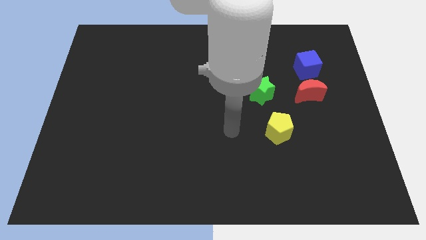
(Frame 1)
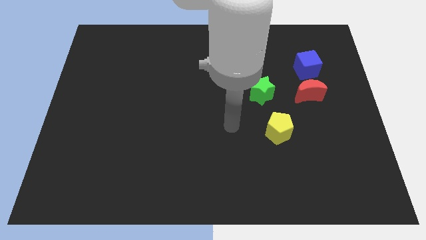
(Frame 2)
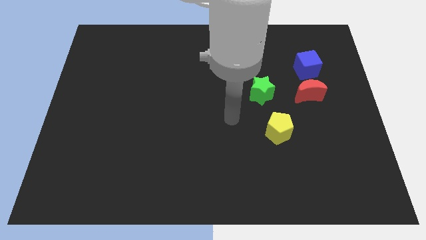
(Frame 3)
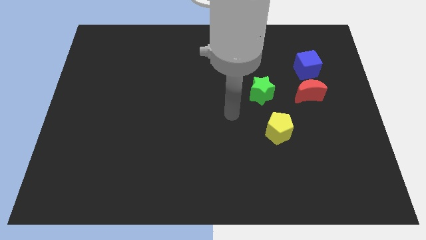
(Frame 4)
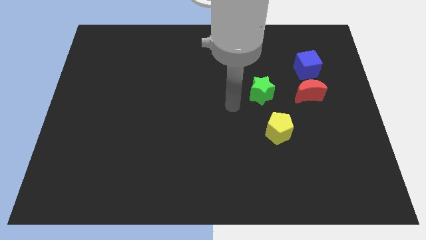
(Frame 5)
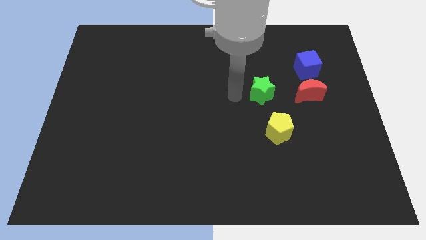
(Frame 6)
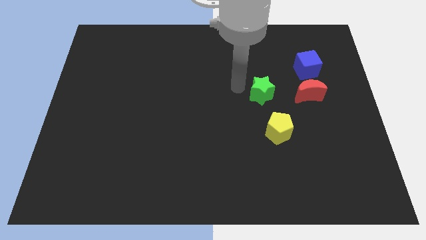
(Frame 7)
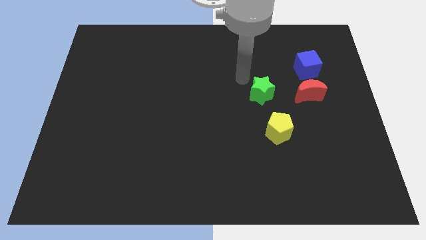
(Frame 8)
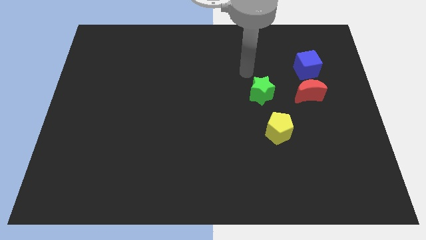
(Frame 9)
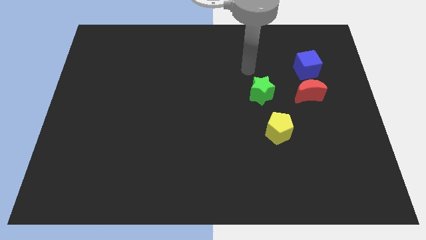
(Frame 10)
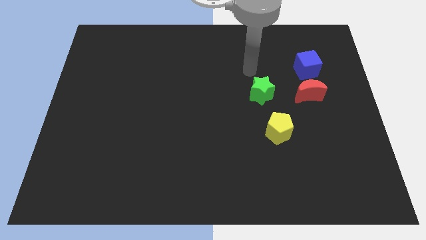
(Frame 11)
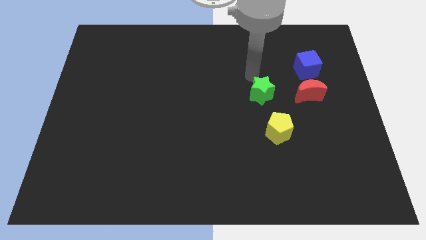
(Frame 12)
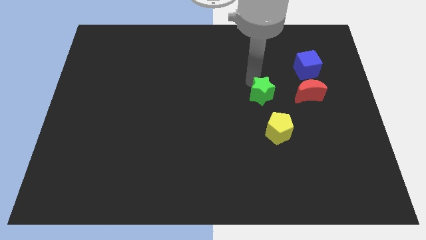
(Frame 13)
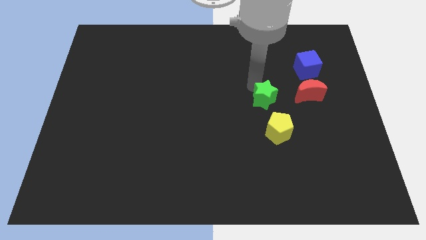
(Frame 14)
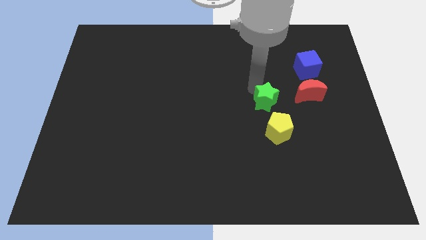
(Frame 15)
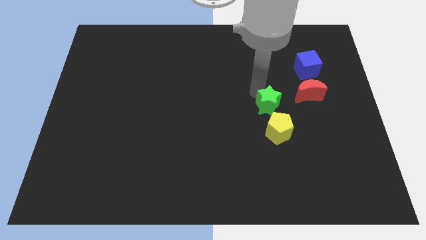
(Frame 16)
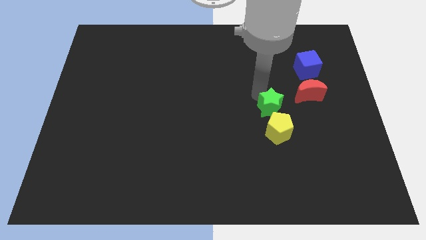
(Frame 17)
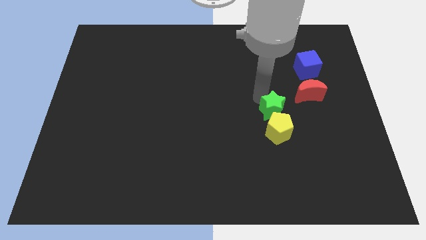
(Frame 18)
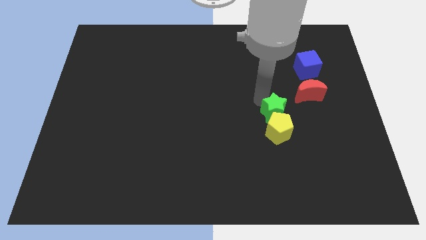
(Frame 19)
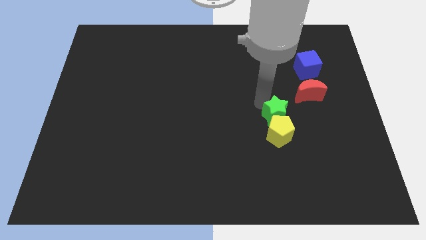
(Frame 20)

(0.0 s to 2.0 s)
move the green star towards the pentagon

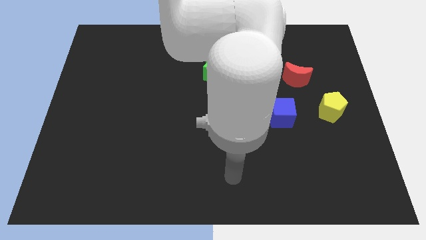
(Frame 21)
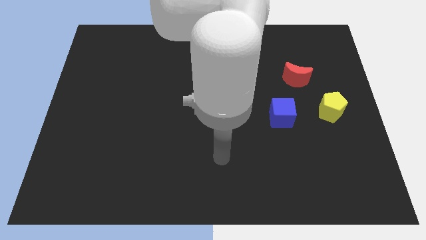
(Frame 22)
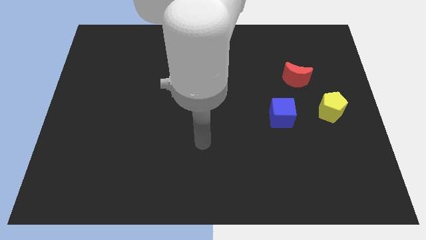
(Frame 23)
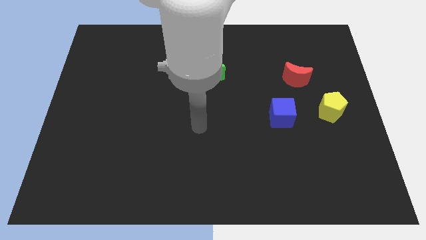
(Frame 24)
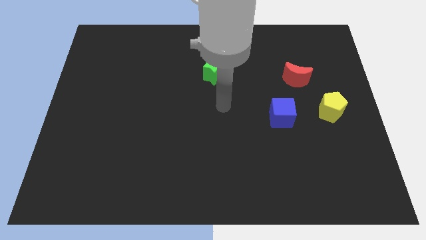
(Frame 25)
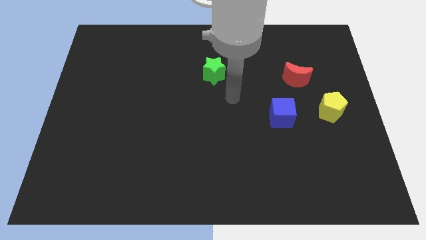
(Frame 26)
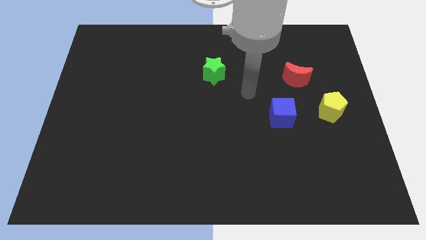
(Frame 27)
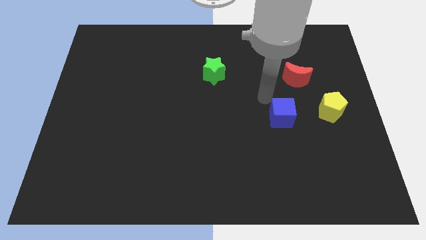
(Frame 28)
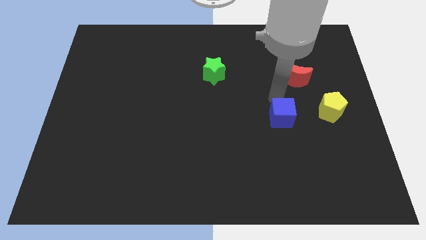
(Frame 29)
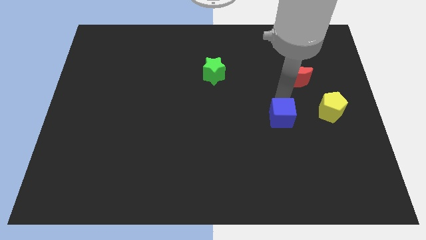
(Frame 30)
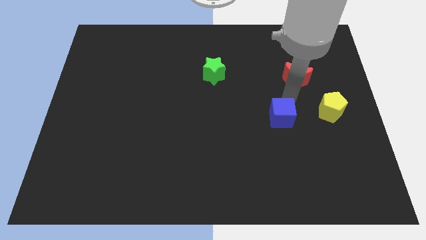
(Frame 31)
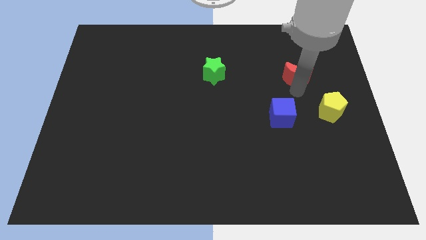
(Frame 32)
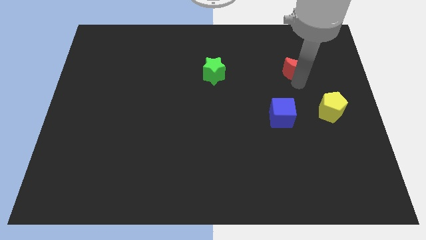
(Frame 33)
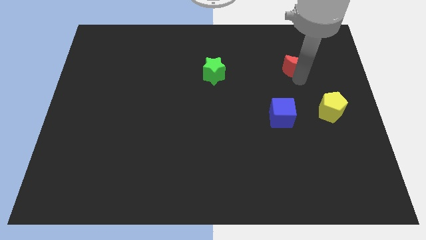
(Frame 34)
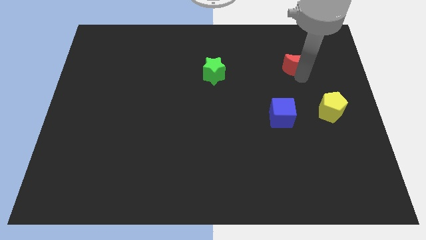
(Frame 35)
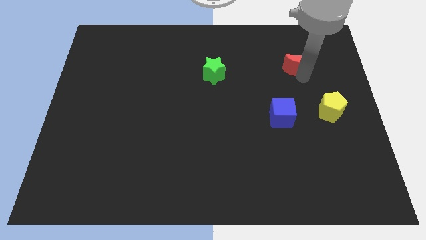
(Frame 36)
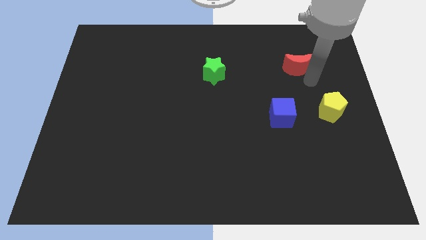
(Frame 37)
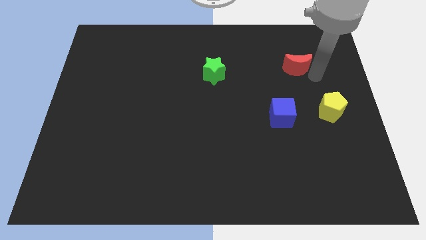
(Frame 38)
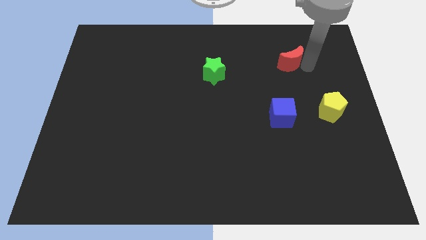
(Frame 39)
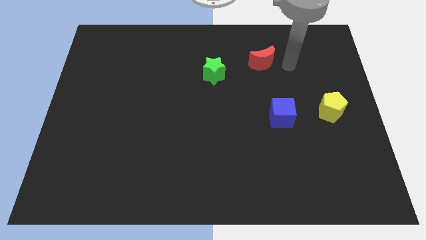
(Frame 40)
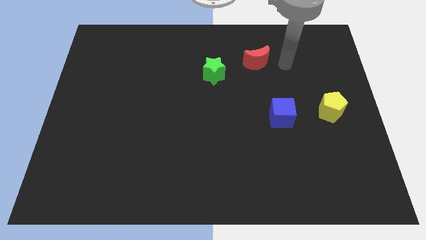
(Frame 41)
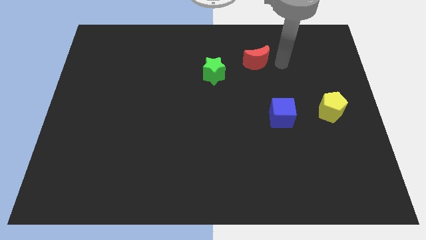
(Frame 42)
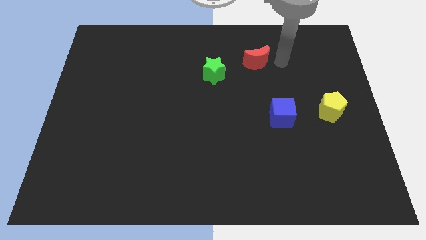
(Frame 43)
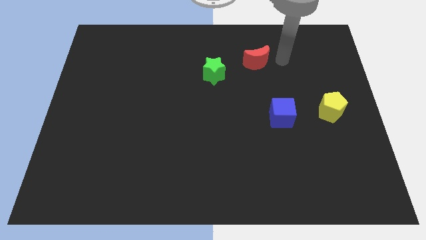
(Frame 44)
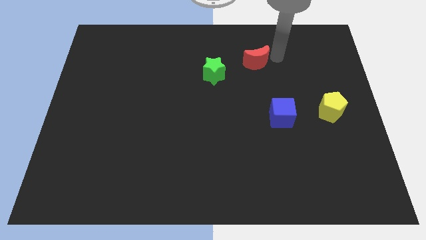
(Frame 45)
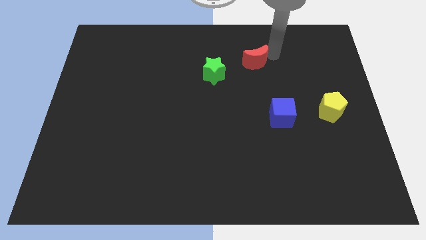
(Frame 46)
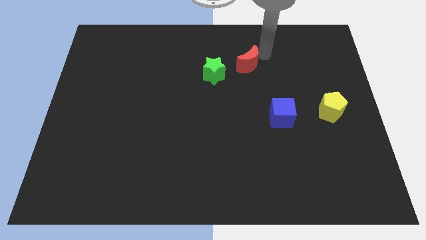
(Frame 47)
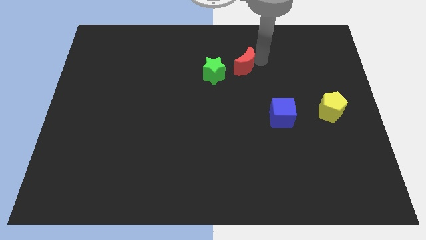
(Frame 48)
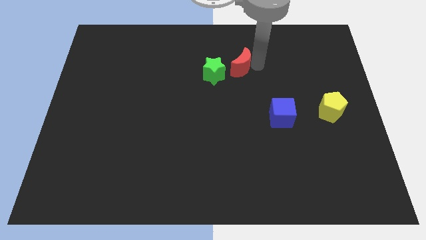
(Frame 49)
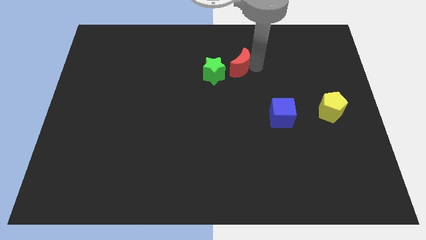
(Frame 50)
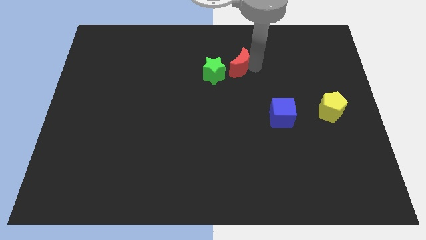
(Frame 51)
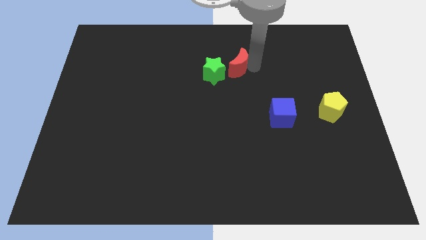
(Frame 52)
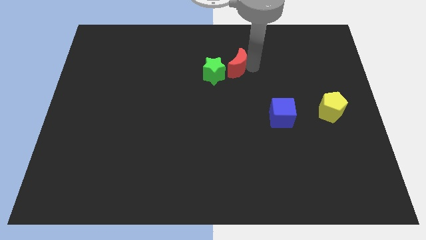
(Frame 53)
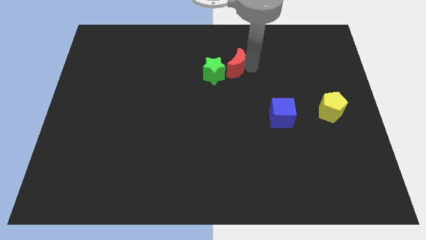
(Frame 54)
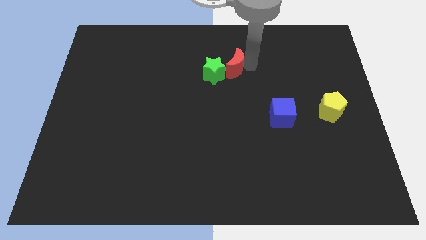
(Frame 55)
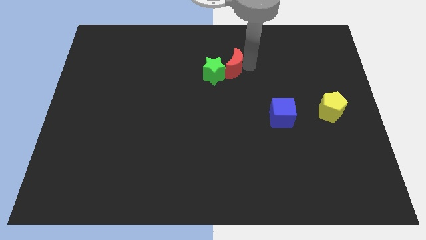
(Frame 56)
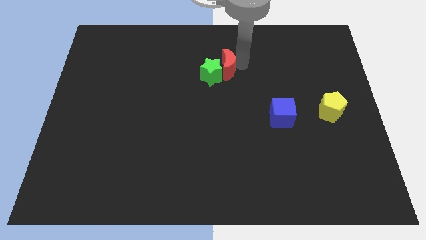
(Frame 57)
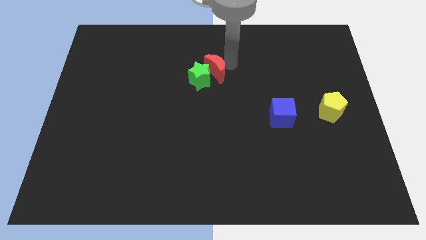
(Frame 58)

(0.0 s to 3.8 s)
slide the moon to the green star

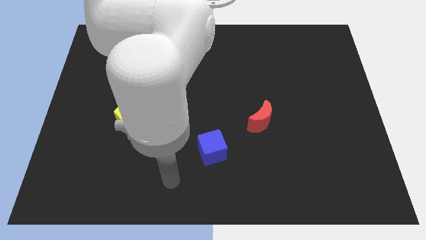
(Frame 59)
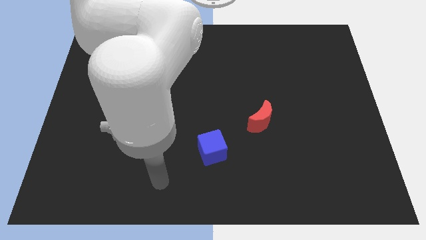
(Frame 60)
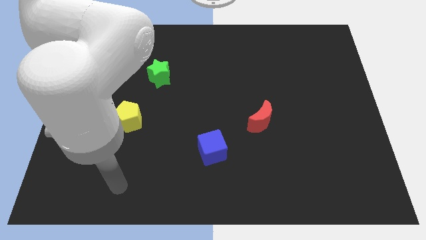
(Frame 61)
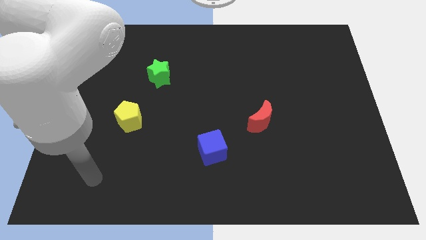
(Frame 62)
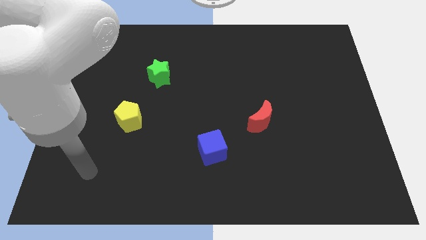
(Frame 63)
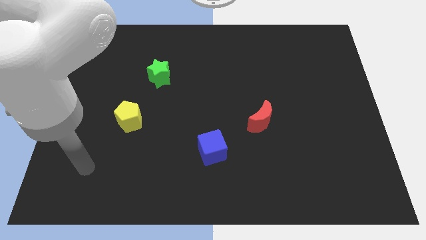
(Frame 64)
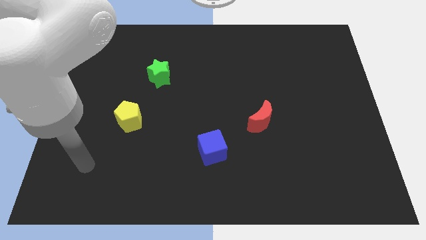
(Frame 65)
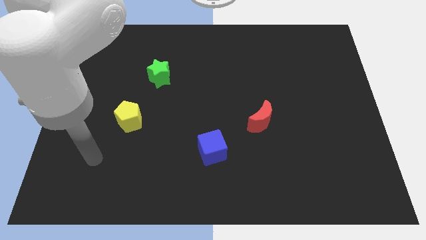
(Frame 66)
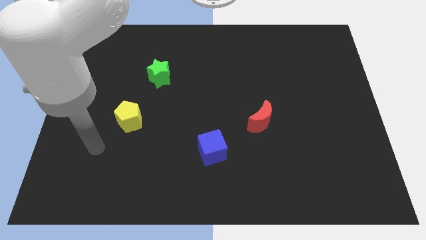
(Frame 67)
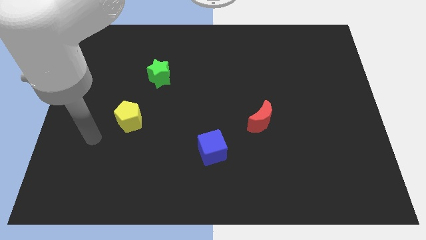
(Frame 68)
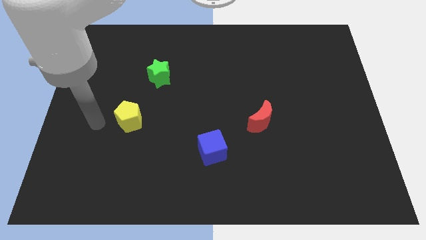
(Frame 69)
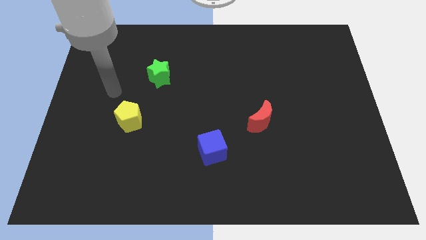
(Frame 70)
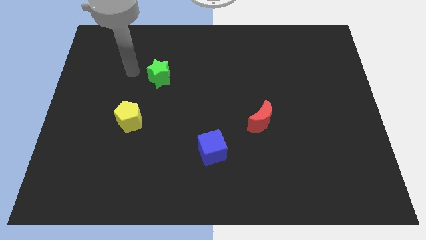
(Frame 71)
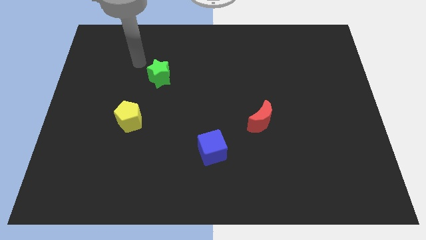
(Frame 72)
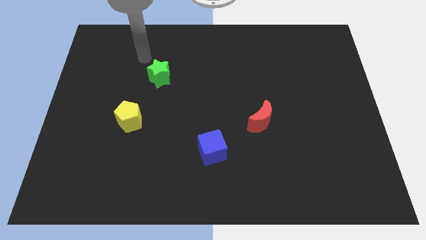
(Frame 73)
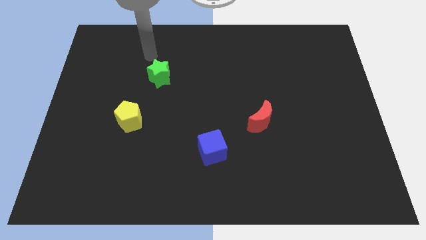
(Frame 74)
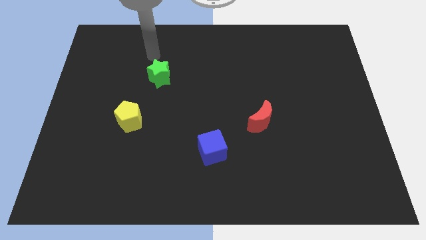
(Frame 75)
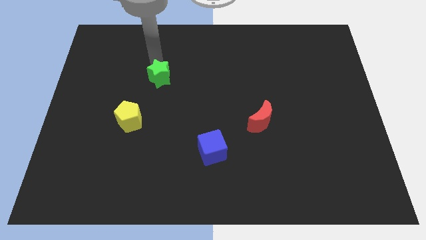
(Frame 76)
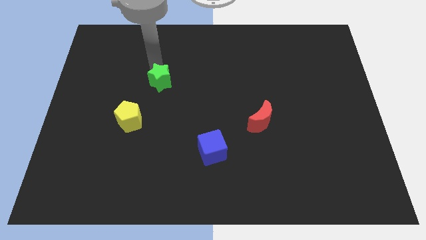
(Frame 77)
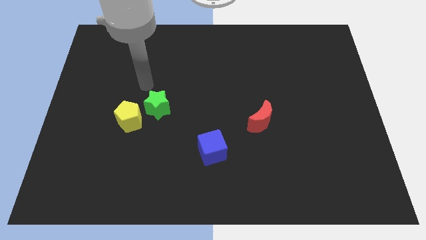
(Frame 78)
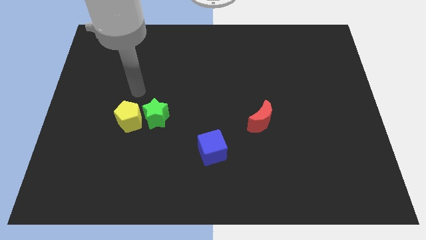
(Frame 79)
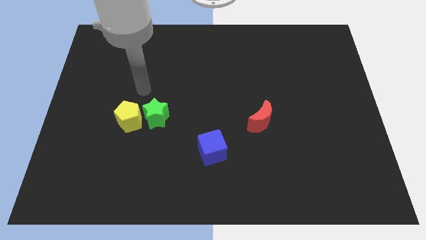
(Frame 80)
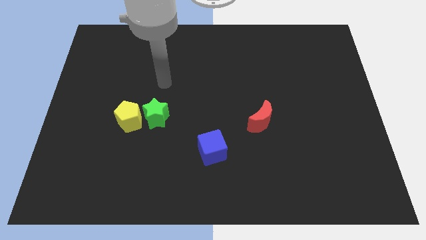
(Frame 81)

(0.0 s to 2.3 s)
slide the green block next to the pentagon

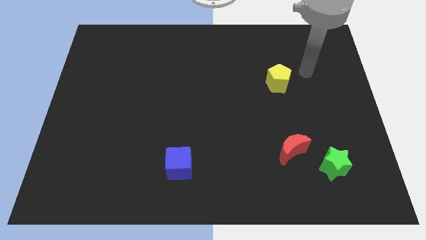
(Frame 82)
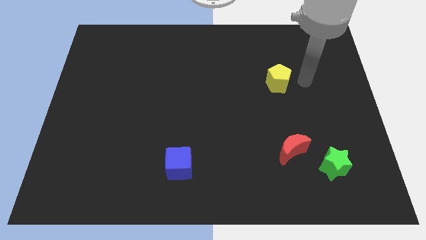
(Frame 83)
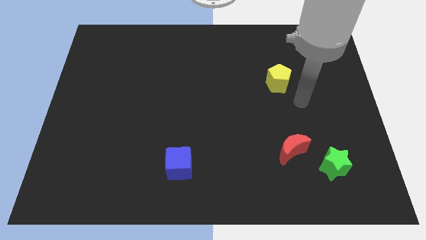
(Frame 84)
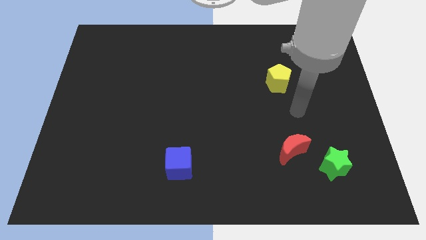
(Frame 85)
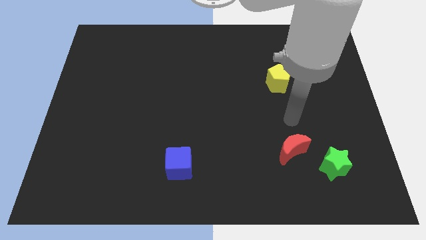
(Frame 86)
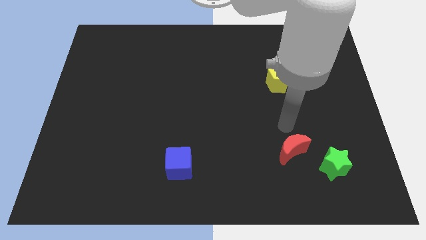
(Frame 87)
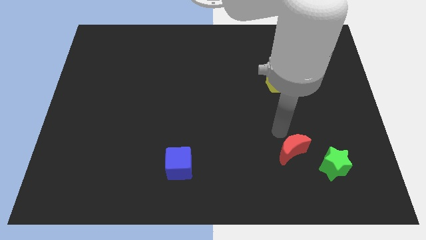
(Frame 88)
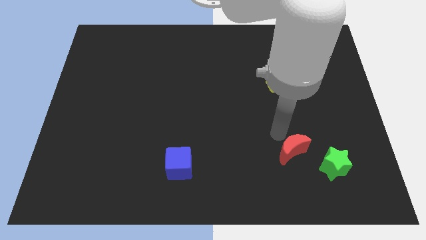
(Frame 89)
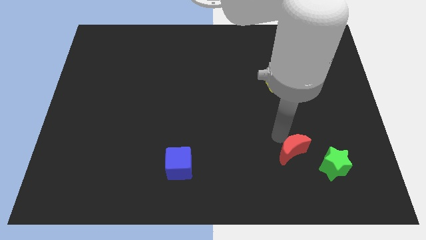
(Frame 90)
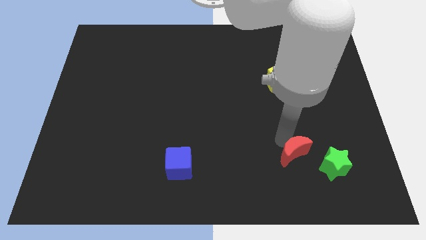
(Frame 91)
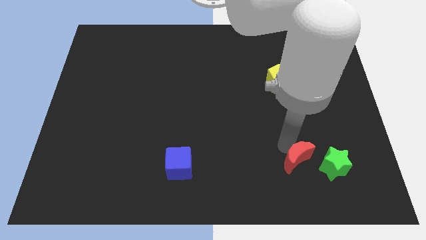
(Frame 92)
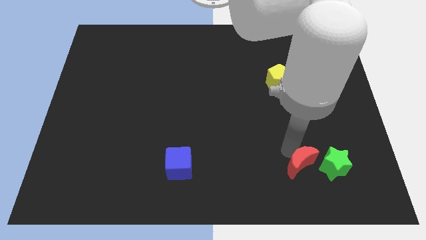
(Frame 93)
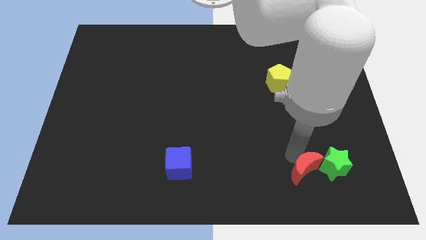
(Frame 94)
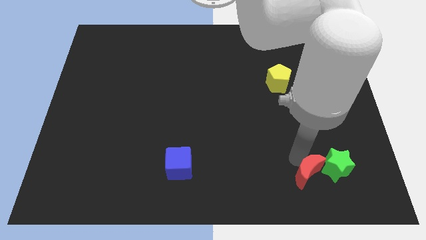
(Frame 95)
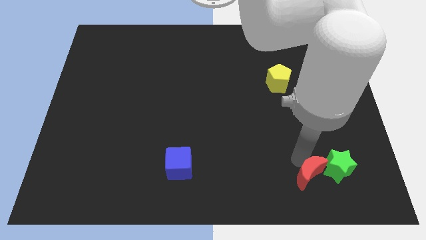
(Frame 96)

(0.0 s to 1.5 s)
put the red block towards the green star
